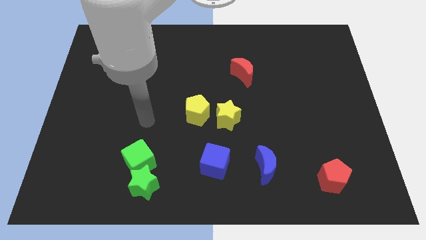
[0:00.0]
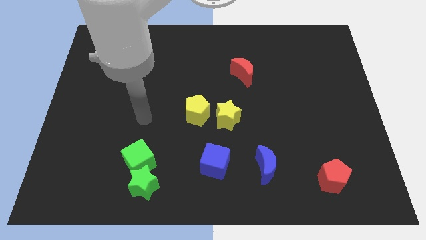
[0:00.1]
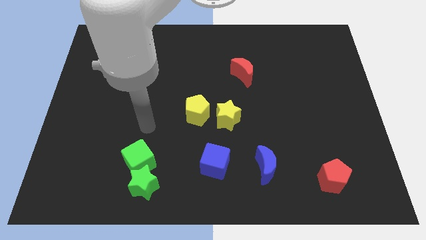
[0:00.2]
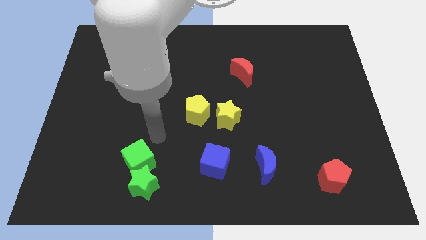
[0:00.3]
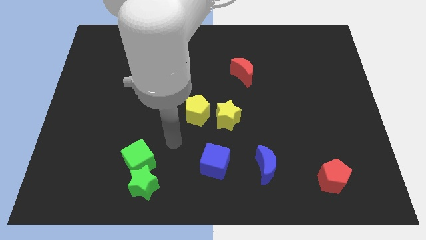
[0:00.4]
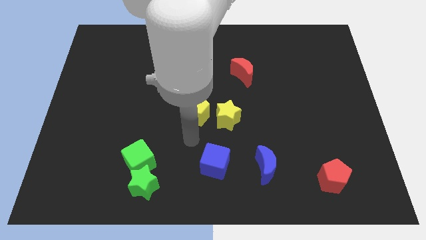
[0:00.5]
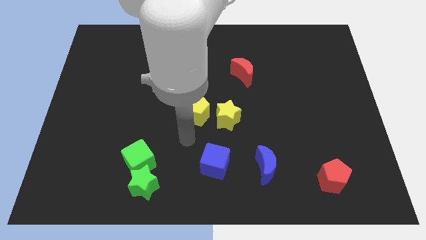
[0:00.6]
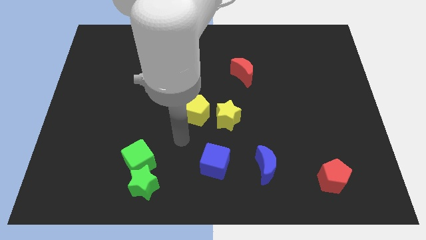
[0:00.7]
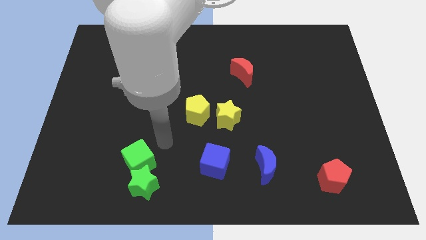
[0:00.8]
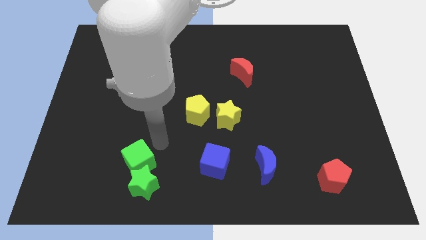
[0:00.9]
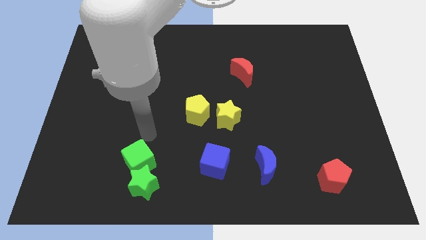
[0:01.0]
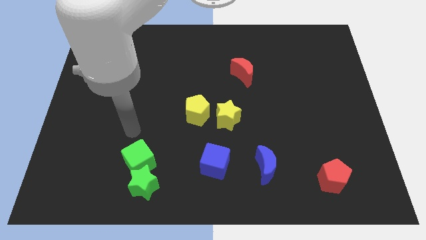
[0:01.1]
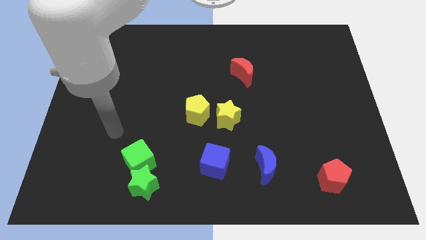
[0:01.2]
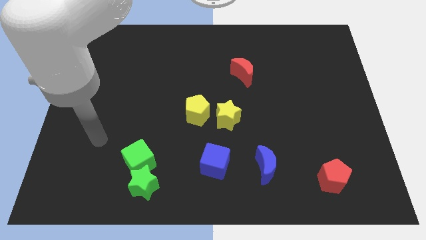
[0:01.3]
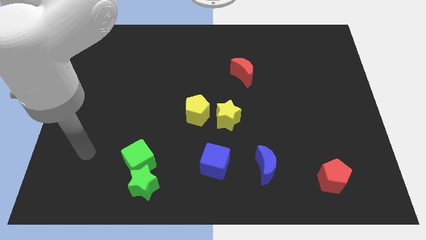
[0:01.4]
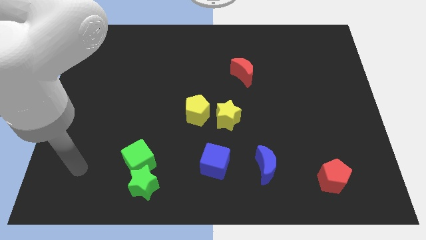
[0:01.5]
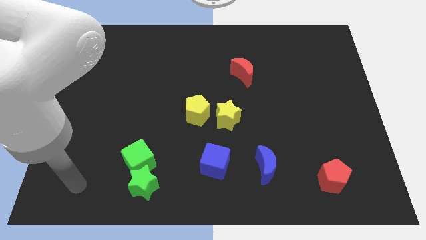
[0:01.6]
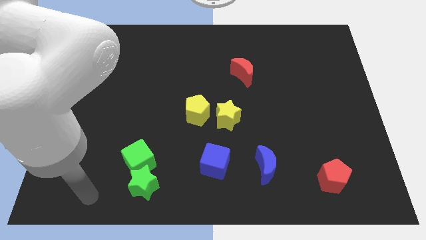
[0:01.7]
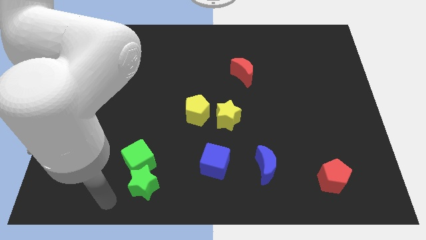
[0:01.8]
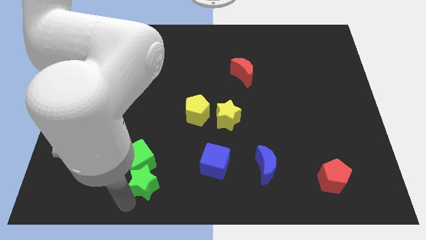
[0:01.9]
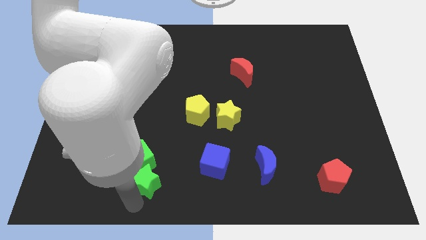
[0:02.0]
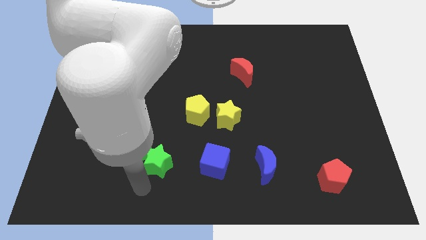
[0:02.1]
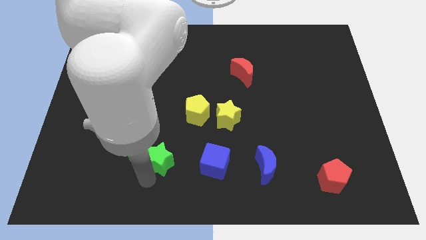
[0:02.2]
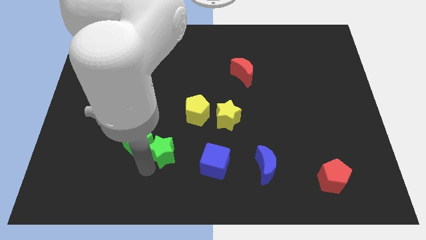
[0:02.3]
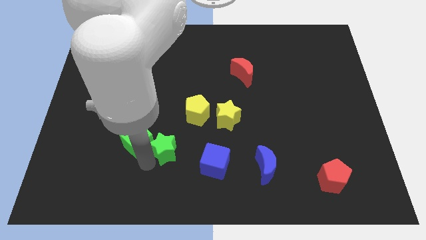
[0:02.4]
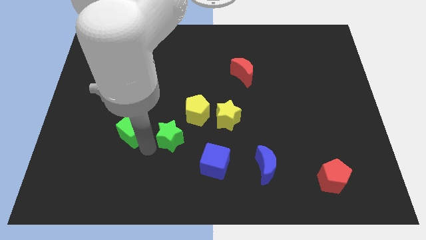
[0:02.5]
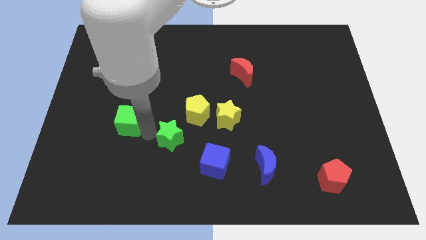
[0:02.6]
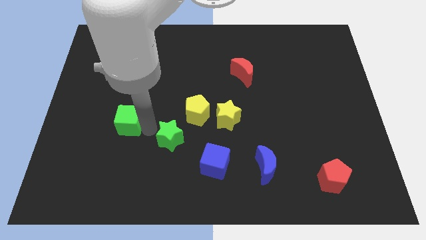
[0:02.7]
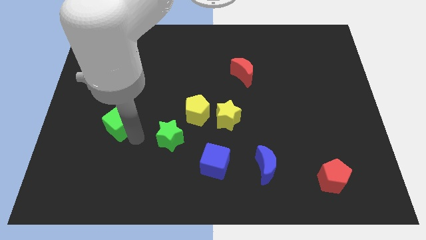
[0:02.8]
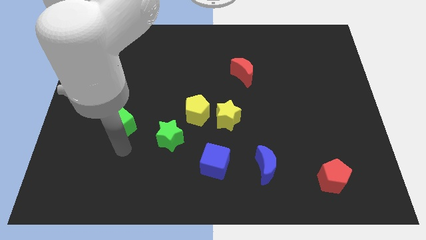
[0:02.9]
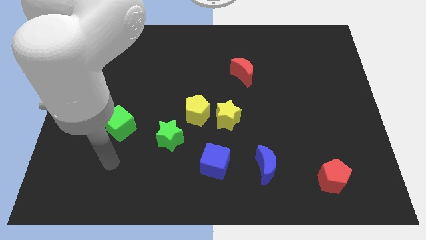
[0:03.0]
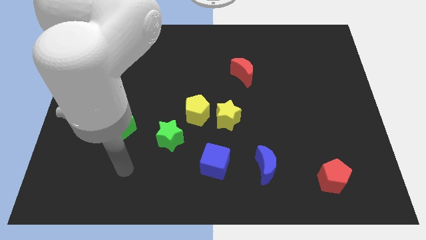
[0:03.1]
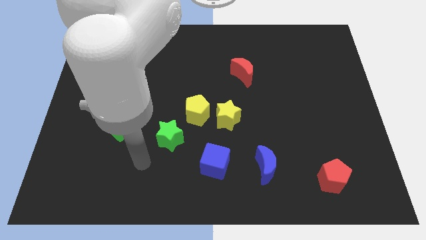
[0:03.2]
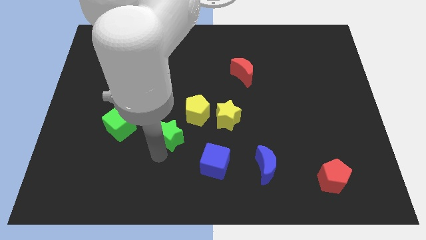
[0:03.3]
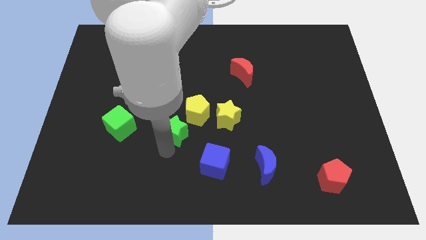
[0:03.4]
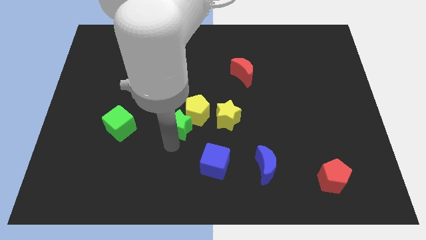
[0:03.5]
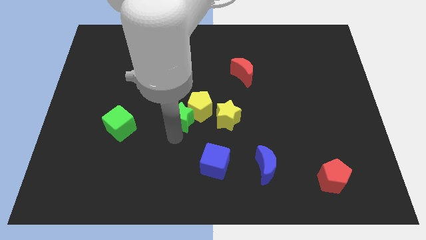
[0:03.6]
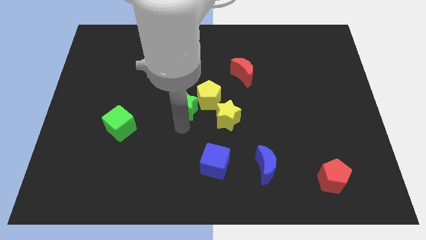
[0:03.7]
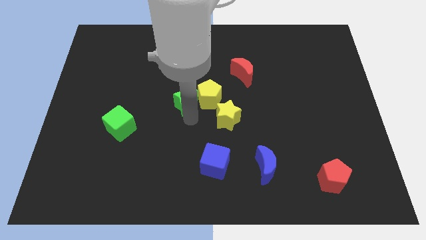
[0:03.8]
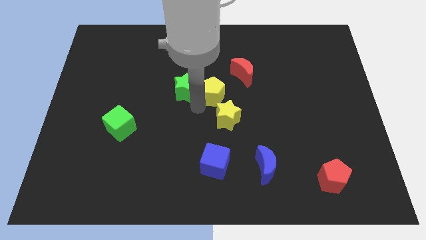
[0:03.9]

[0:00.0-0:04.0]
push the green star into the yellow pentagon

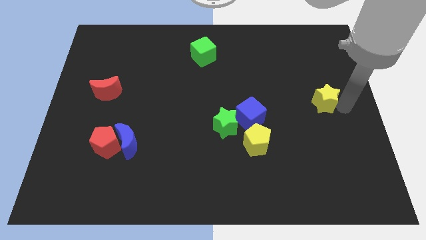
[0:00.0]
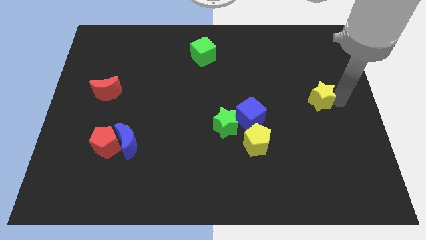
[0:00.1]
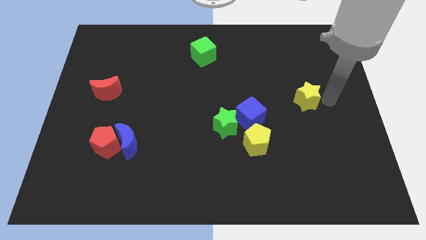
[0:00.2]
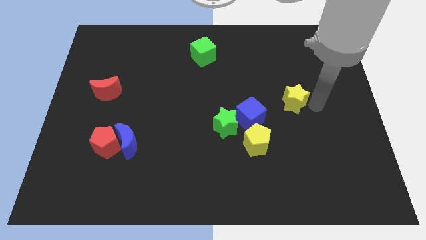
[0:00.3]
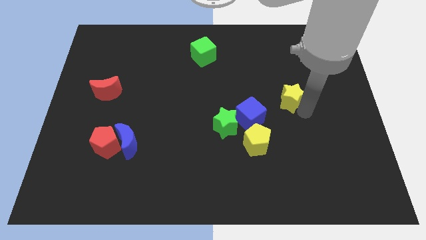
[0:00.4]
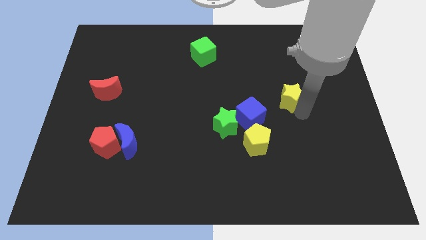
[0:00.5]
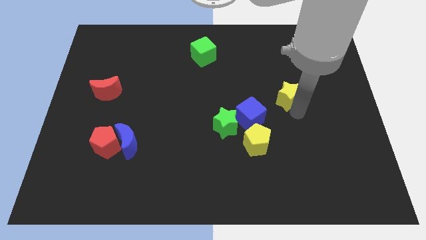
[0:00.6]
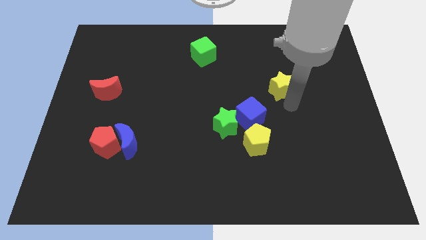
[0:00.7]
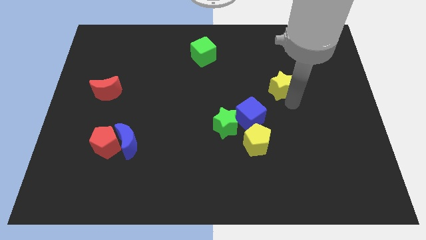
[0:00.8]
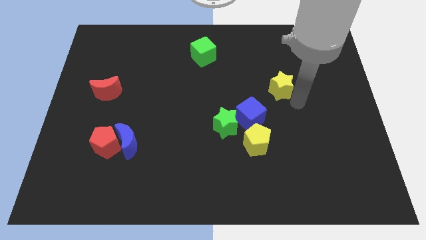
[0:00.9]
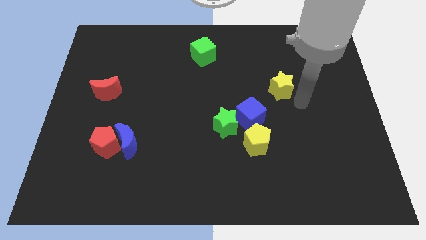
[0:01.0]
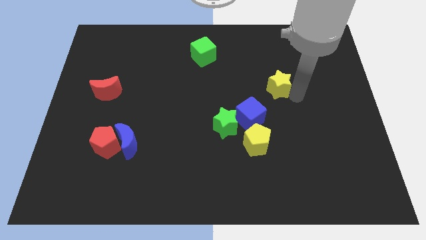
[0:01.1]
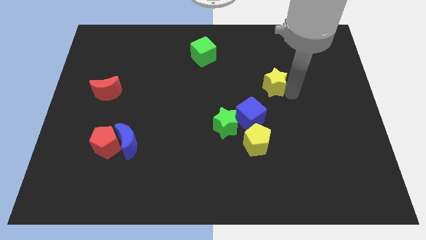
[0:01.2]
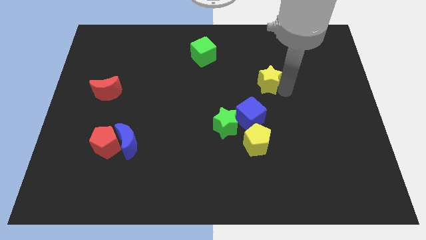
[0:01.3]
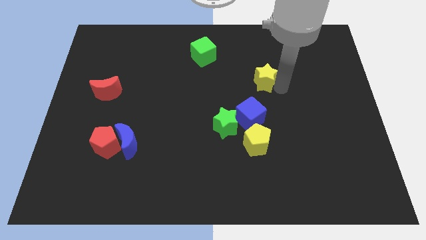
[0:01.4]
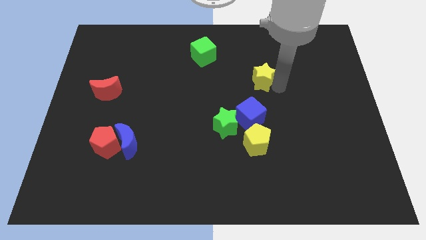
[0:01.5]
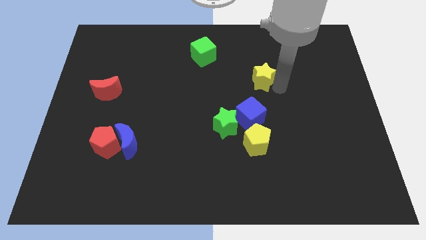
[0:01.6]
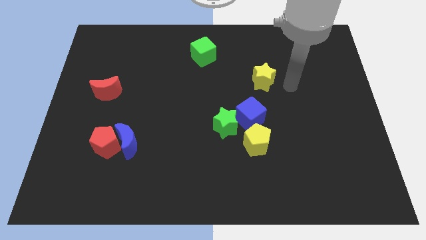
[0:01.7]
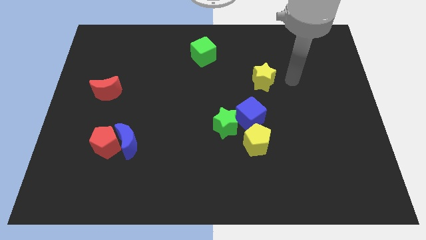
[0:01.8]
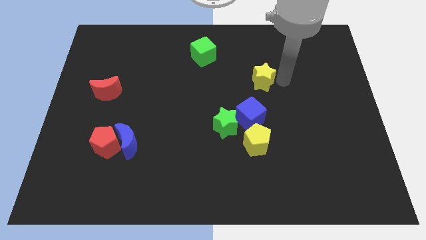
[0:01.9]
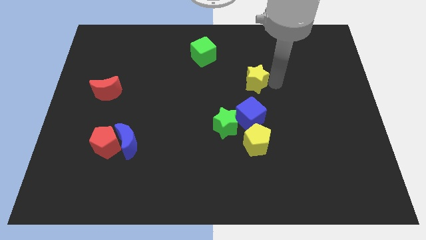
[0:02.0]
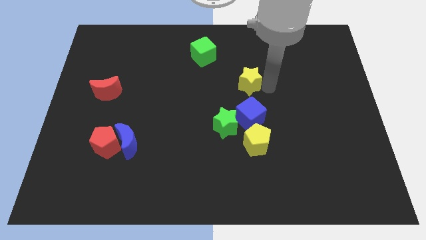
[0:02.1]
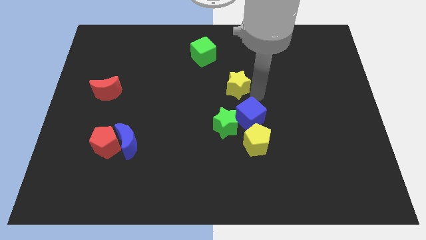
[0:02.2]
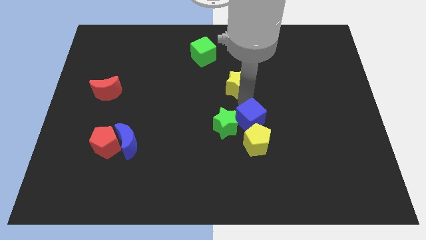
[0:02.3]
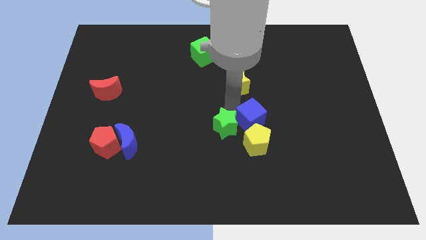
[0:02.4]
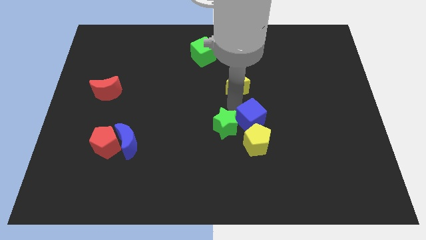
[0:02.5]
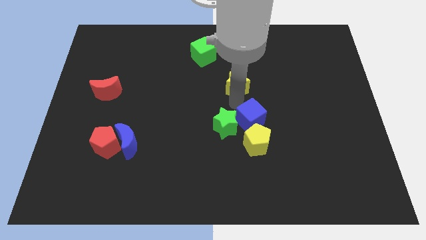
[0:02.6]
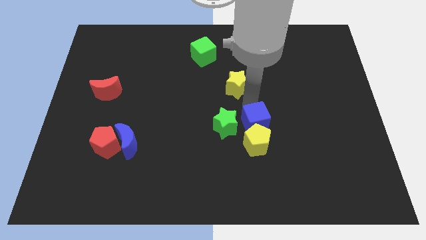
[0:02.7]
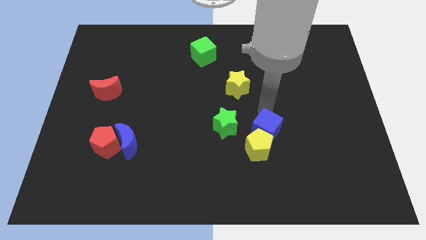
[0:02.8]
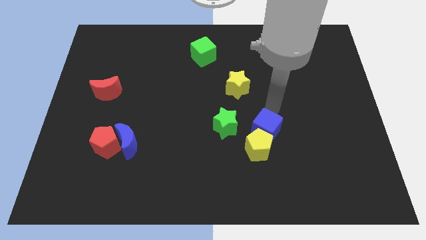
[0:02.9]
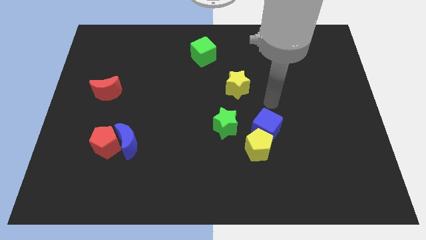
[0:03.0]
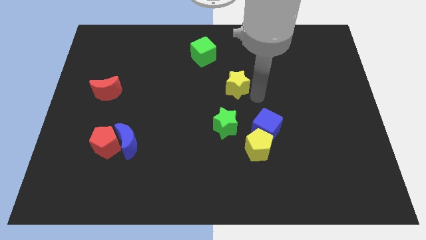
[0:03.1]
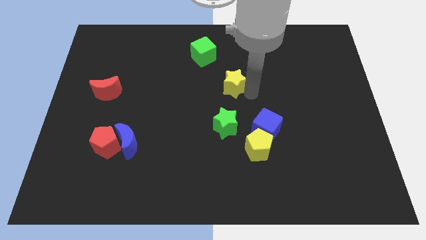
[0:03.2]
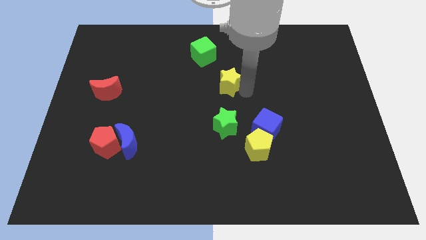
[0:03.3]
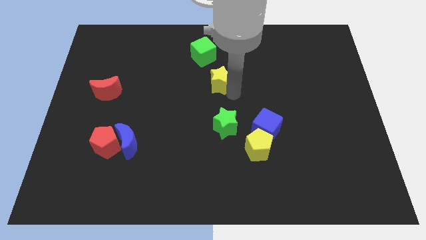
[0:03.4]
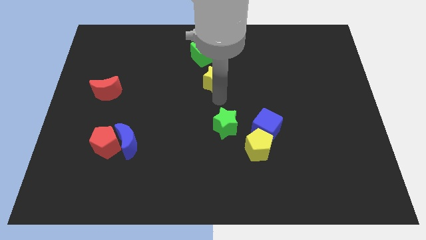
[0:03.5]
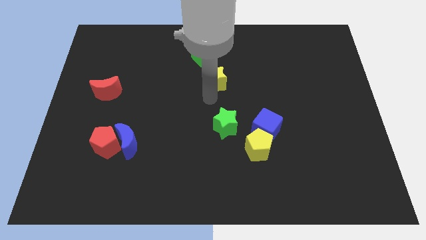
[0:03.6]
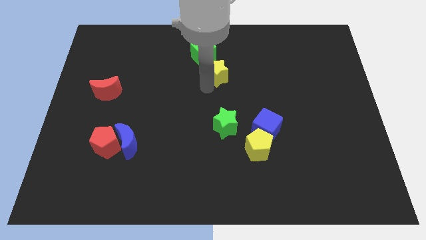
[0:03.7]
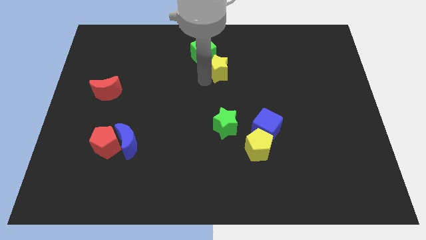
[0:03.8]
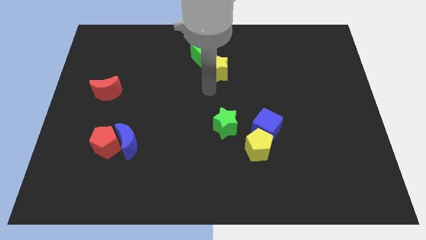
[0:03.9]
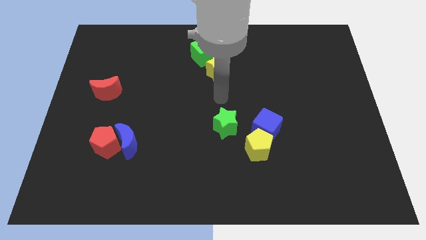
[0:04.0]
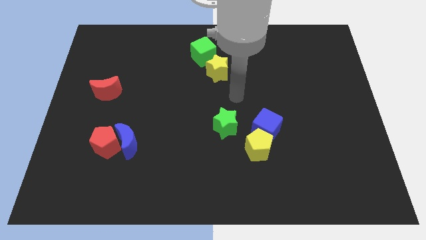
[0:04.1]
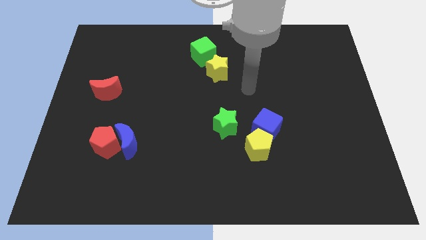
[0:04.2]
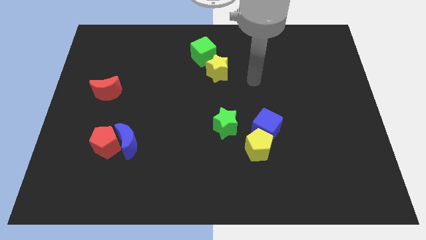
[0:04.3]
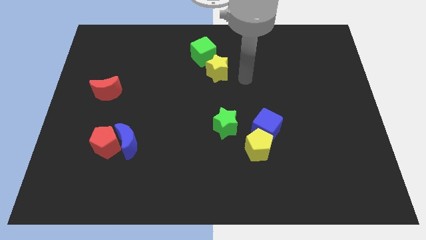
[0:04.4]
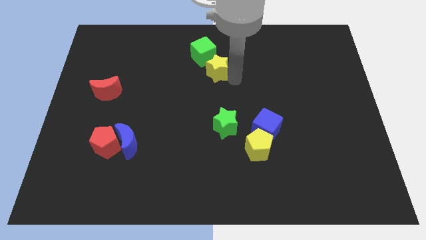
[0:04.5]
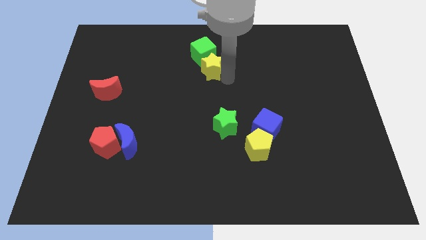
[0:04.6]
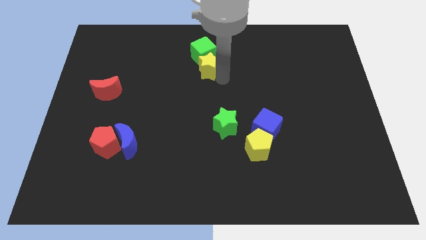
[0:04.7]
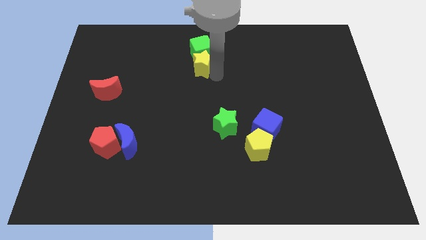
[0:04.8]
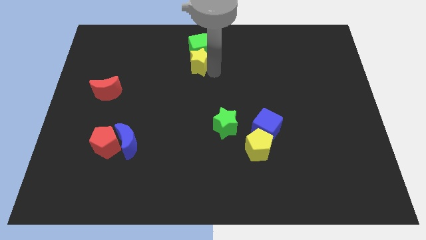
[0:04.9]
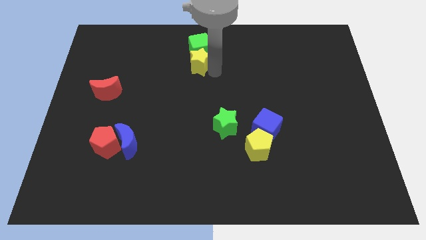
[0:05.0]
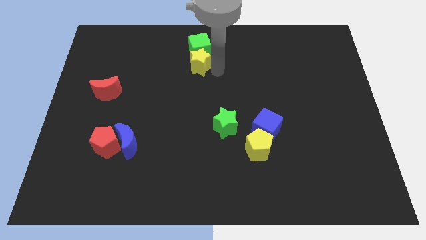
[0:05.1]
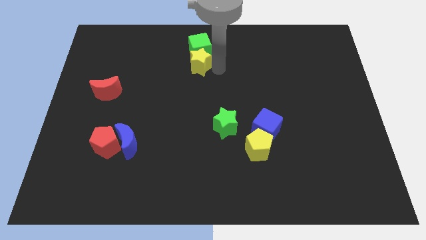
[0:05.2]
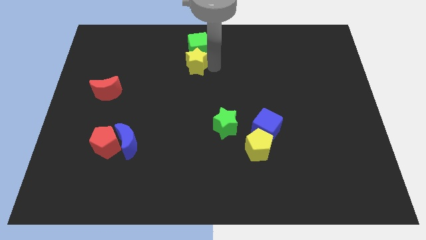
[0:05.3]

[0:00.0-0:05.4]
push the yellow star into the green cube
